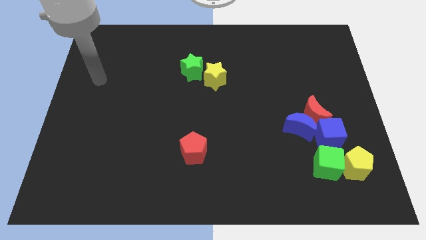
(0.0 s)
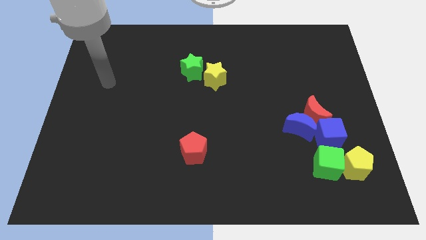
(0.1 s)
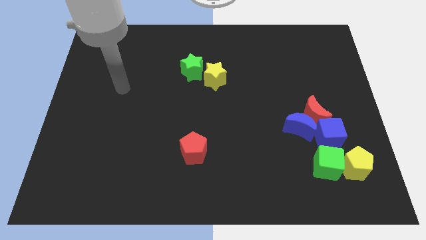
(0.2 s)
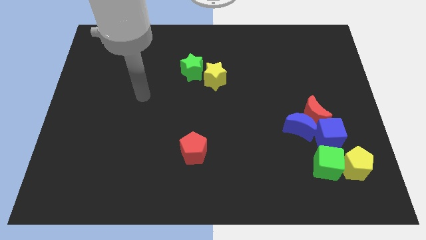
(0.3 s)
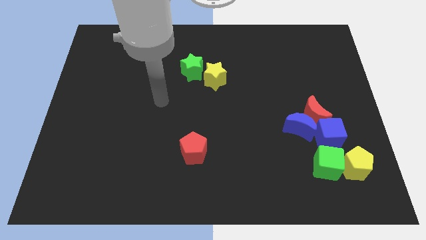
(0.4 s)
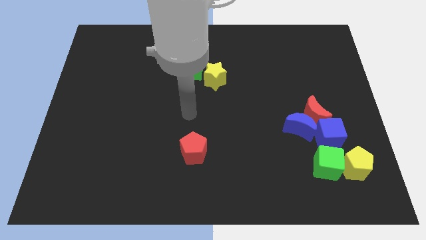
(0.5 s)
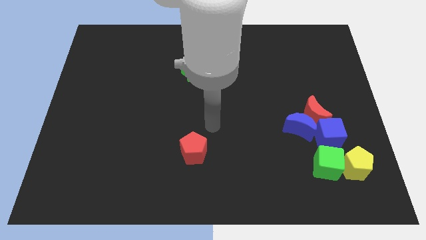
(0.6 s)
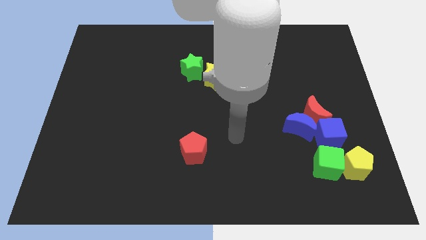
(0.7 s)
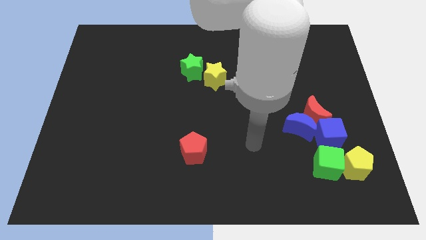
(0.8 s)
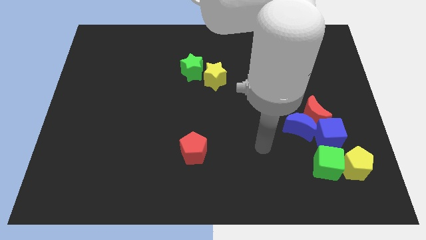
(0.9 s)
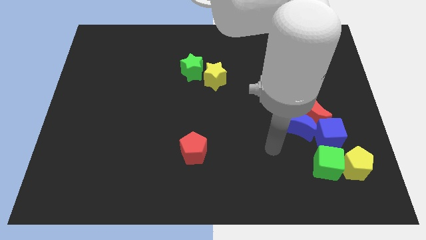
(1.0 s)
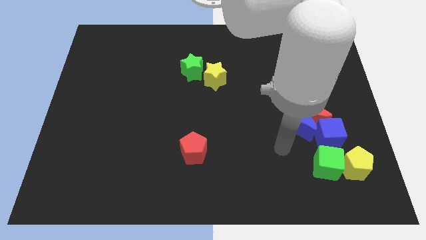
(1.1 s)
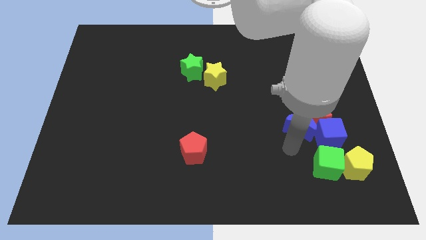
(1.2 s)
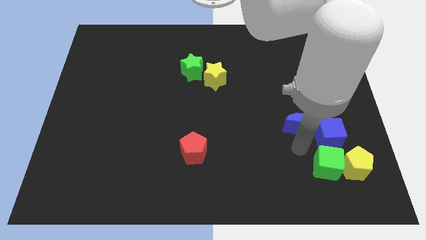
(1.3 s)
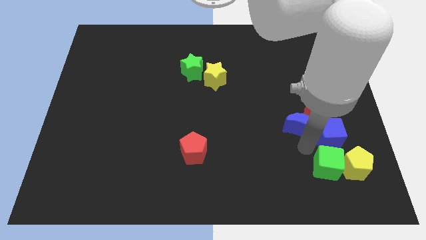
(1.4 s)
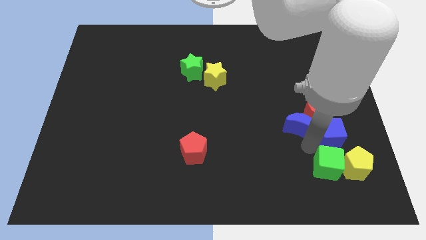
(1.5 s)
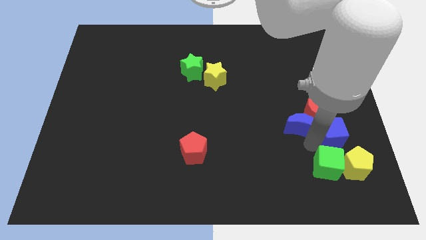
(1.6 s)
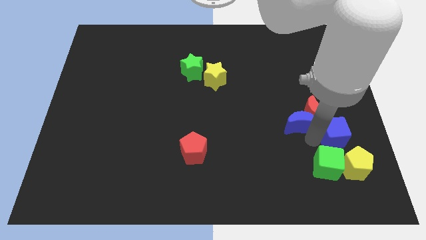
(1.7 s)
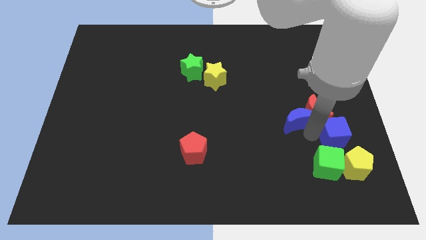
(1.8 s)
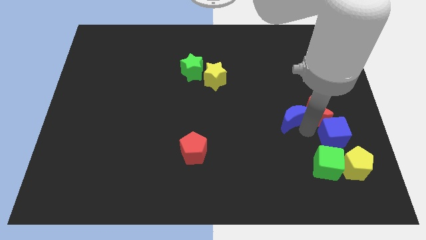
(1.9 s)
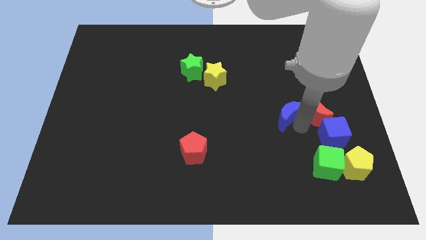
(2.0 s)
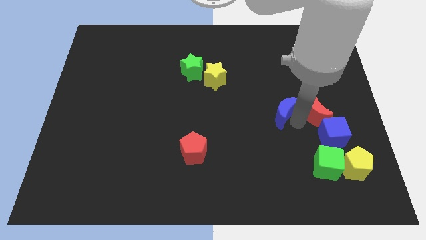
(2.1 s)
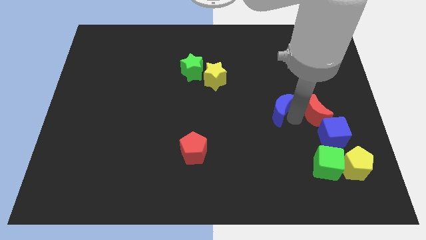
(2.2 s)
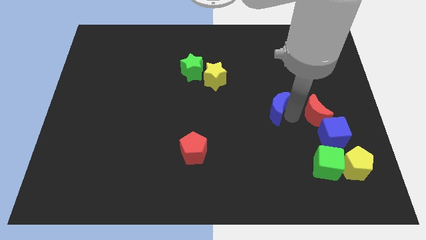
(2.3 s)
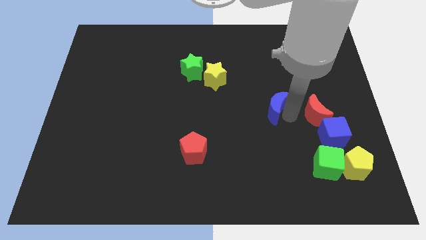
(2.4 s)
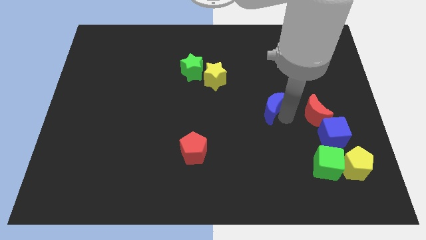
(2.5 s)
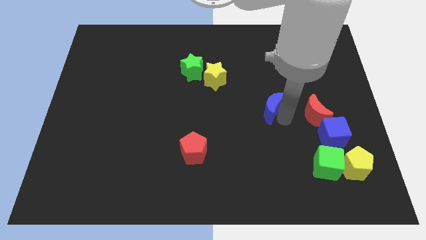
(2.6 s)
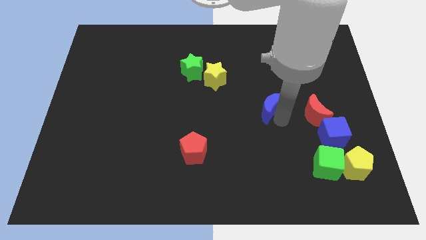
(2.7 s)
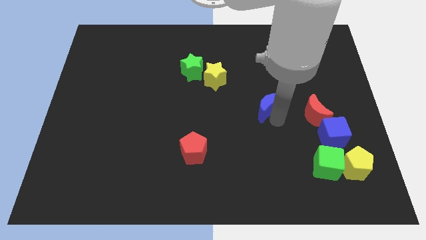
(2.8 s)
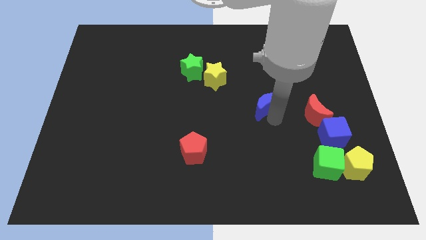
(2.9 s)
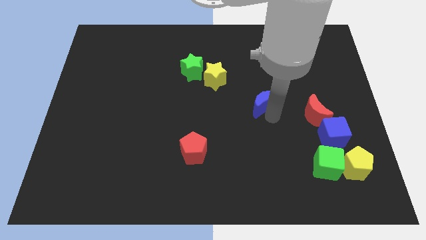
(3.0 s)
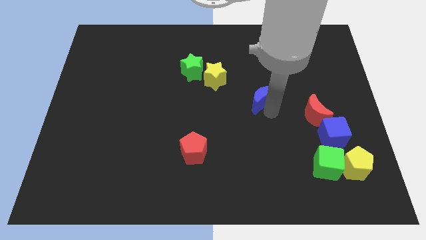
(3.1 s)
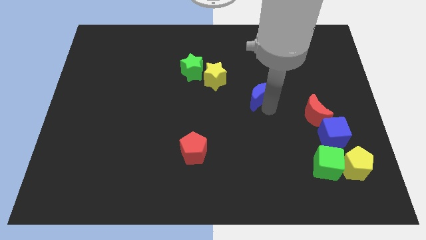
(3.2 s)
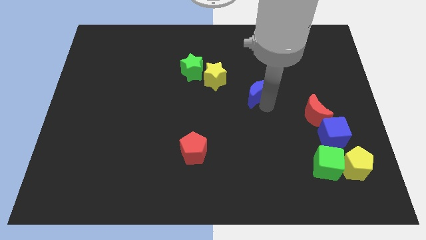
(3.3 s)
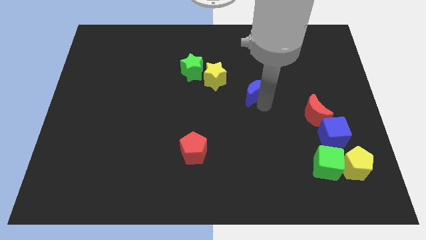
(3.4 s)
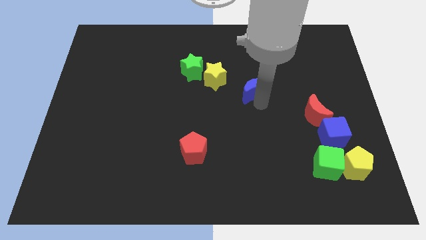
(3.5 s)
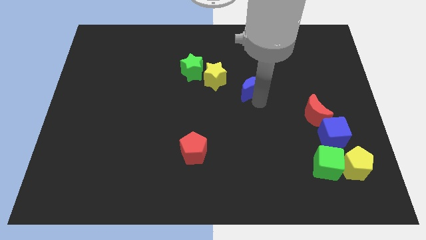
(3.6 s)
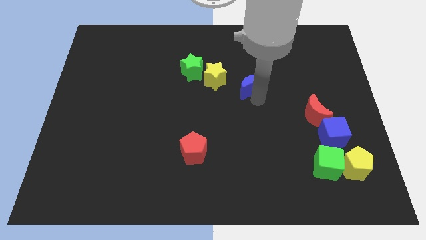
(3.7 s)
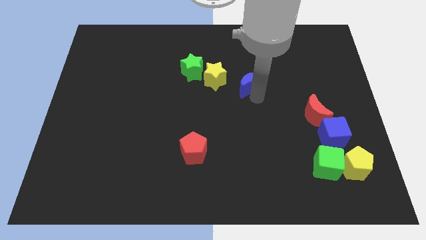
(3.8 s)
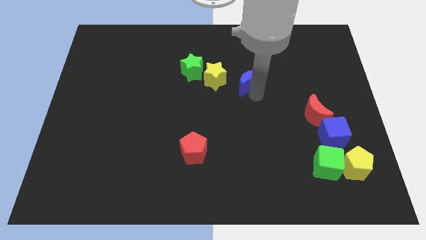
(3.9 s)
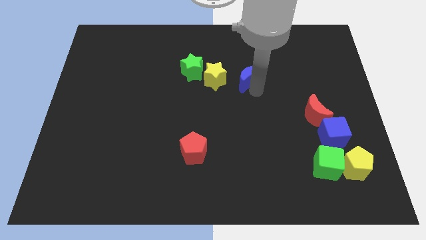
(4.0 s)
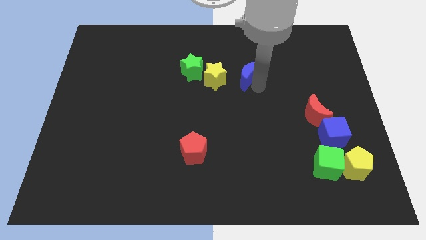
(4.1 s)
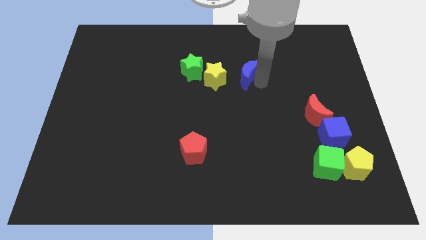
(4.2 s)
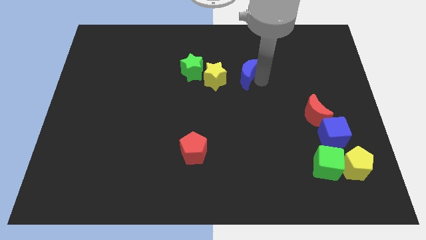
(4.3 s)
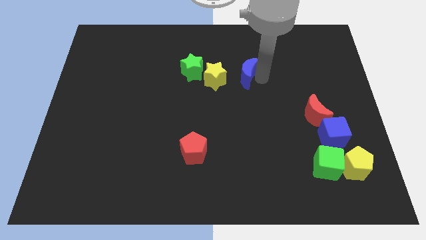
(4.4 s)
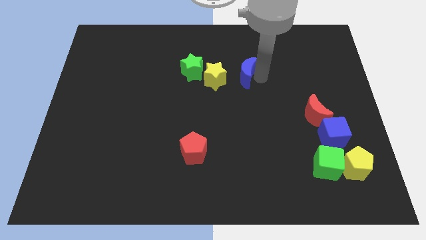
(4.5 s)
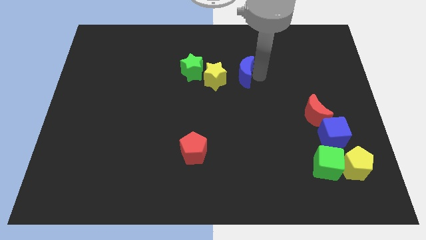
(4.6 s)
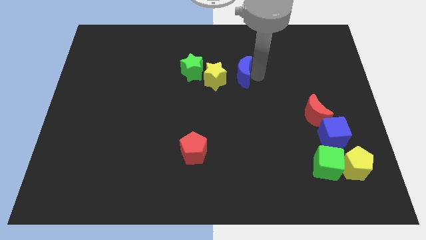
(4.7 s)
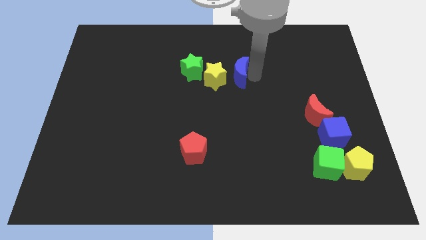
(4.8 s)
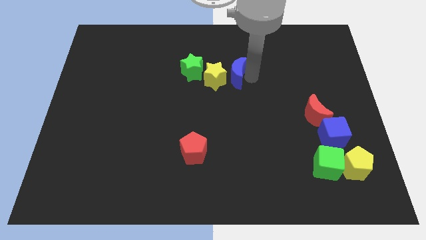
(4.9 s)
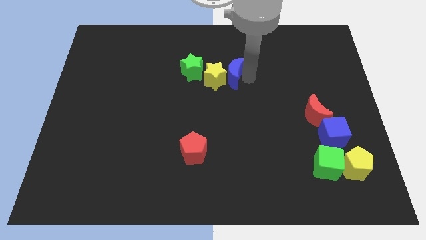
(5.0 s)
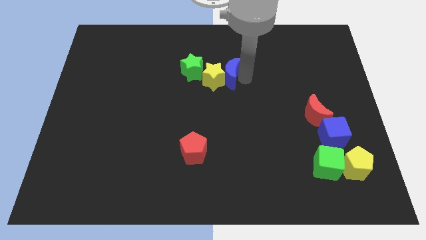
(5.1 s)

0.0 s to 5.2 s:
put the blue moon towards the yellow star

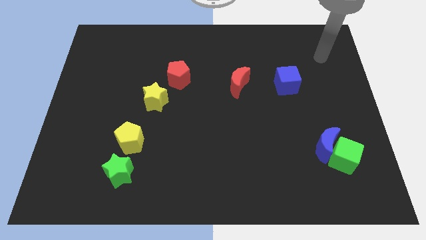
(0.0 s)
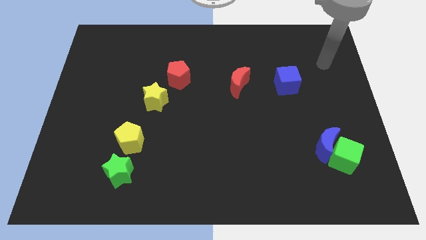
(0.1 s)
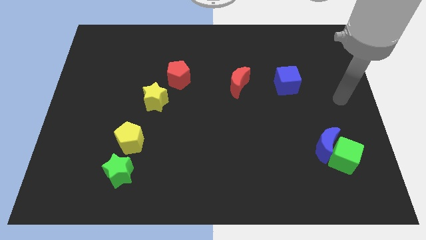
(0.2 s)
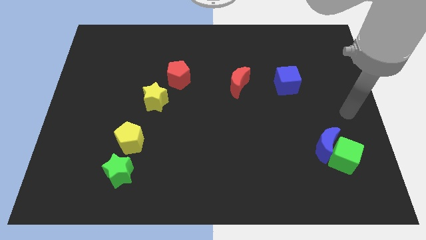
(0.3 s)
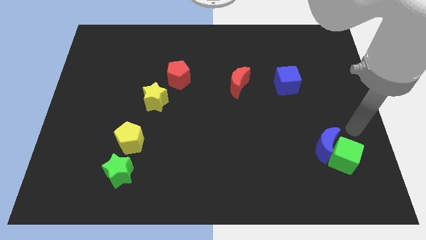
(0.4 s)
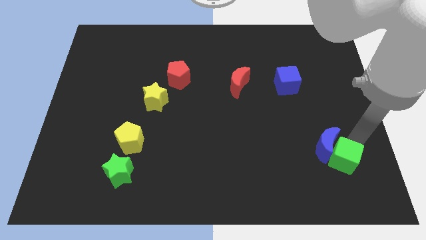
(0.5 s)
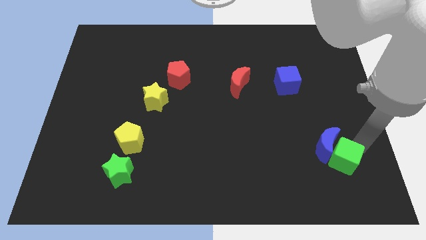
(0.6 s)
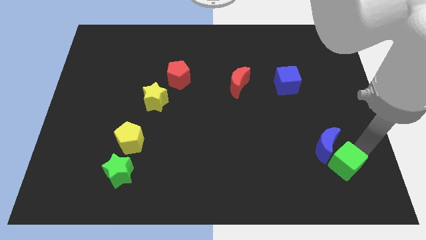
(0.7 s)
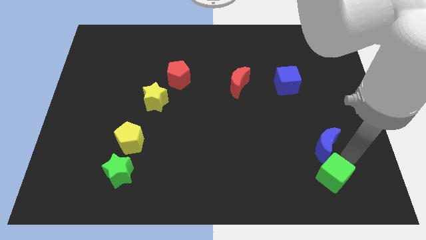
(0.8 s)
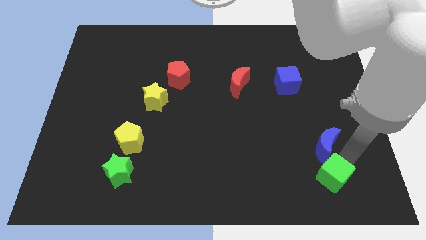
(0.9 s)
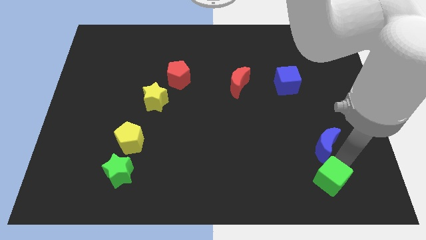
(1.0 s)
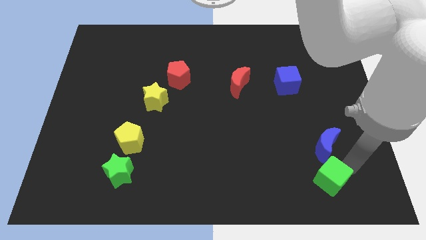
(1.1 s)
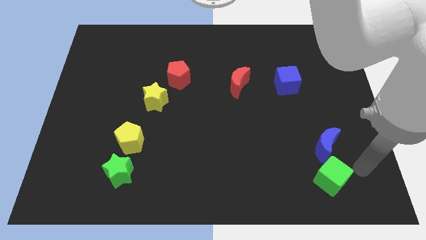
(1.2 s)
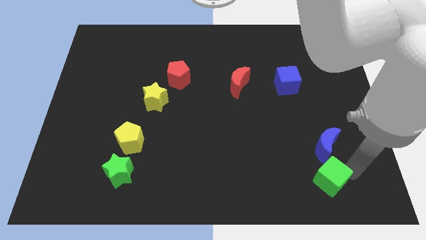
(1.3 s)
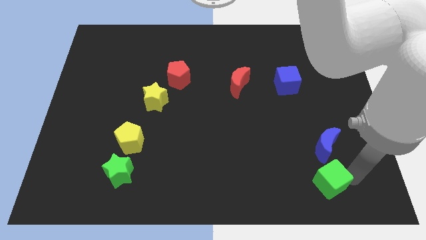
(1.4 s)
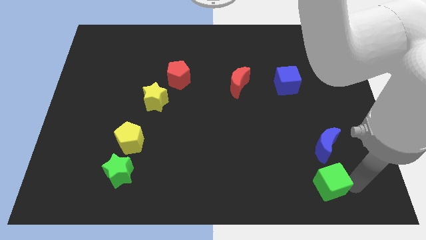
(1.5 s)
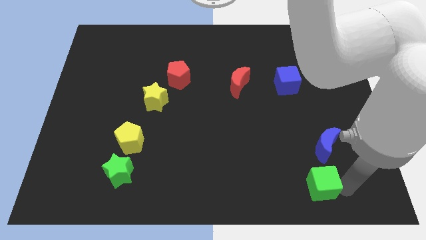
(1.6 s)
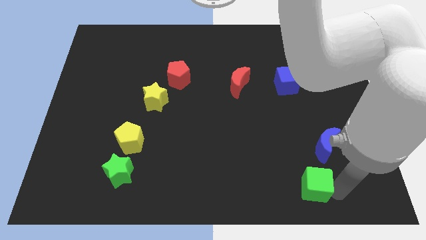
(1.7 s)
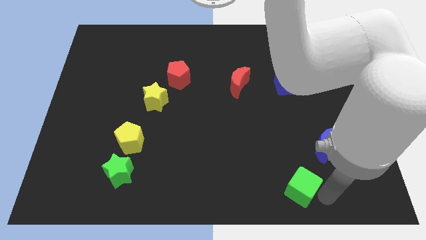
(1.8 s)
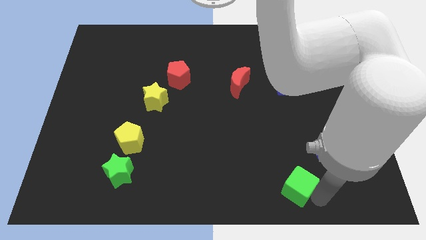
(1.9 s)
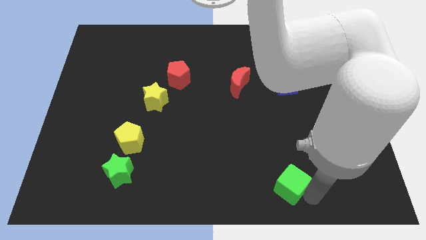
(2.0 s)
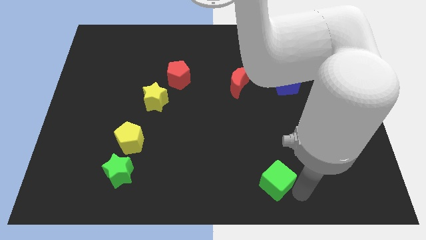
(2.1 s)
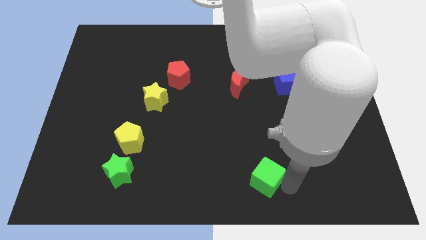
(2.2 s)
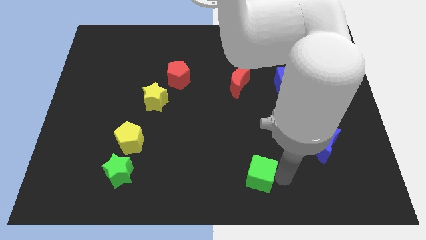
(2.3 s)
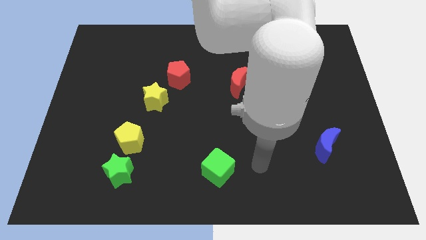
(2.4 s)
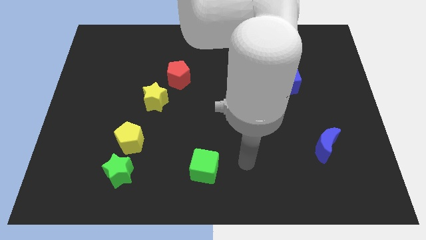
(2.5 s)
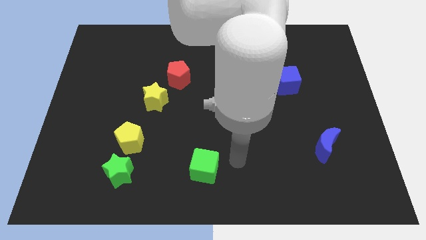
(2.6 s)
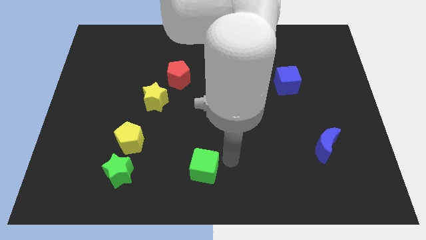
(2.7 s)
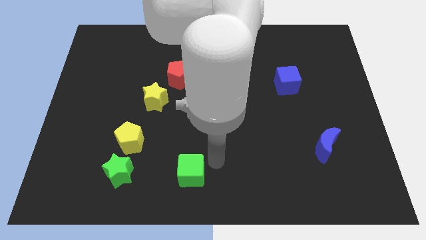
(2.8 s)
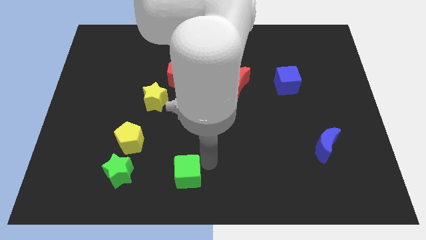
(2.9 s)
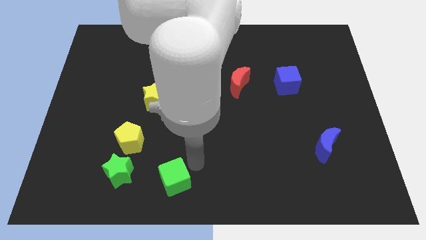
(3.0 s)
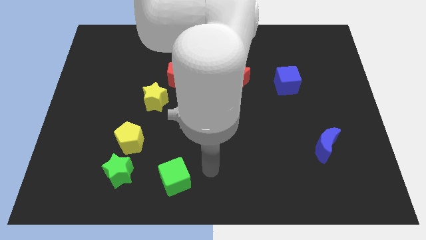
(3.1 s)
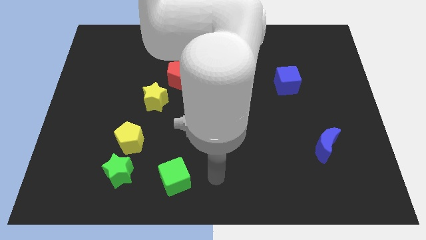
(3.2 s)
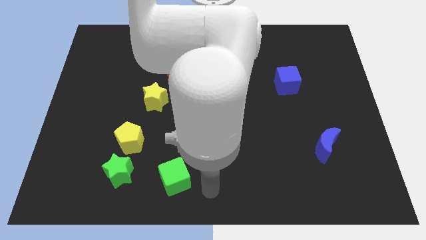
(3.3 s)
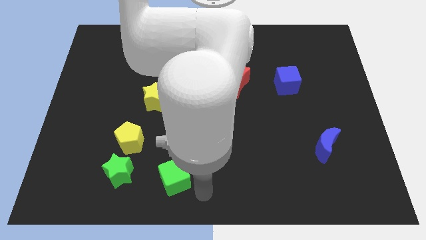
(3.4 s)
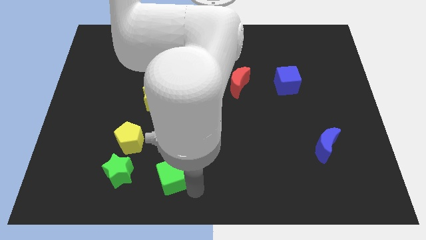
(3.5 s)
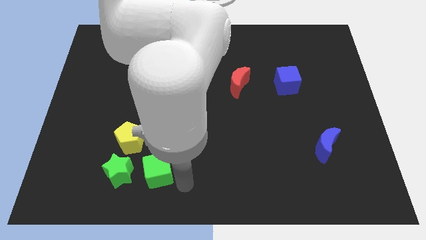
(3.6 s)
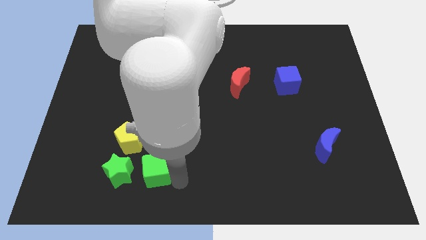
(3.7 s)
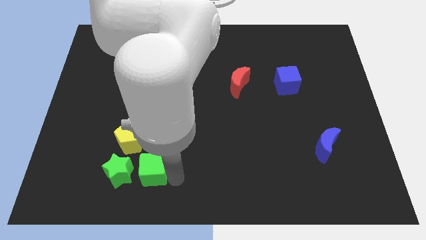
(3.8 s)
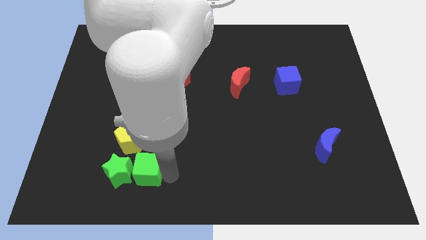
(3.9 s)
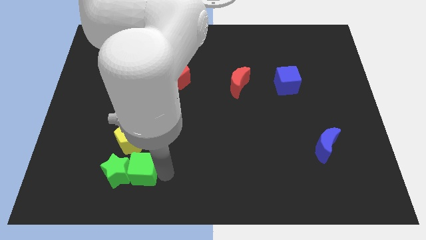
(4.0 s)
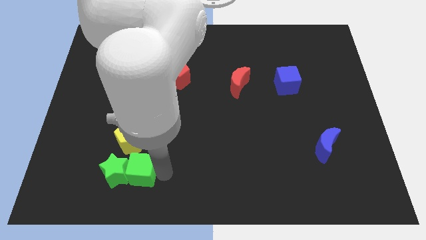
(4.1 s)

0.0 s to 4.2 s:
move the green cube towards the green star
